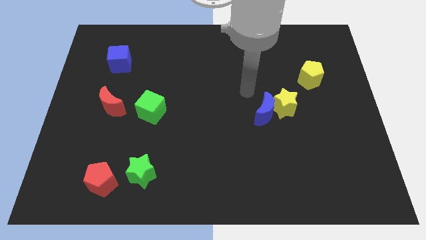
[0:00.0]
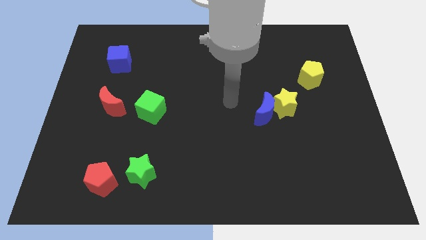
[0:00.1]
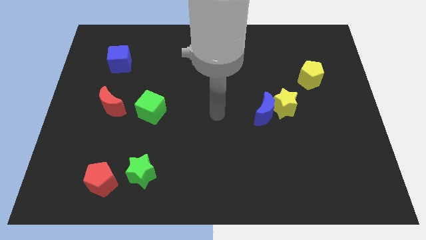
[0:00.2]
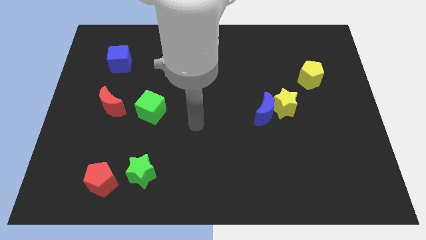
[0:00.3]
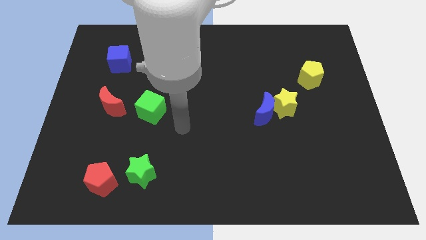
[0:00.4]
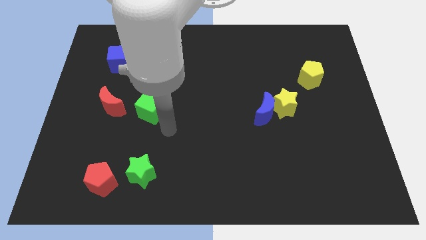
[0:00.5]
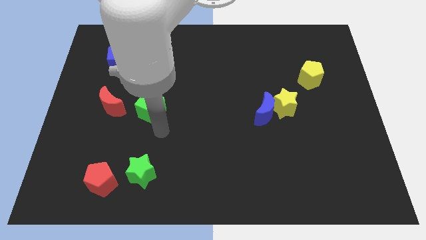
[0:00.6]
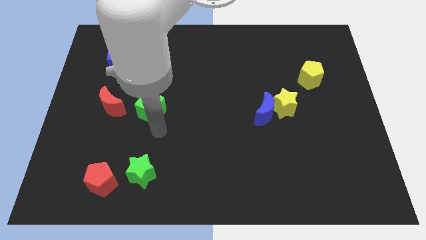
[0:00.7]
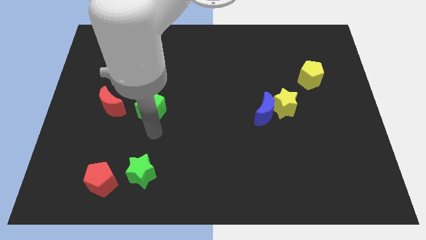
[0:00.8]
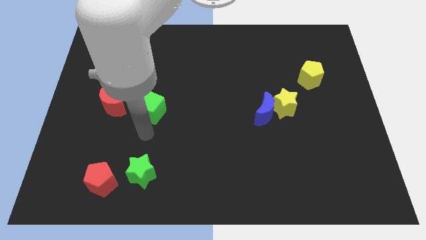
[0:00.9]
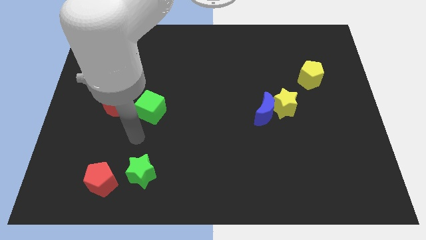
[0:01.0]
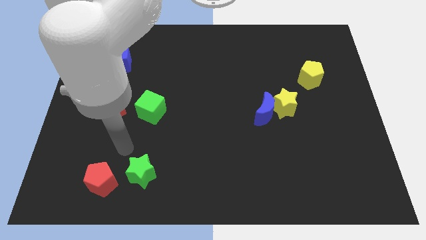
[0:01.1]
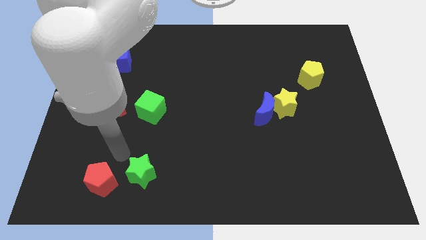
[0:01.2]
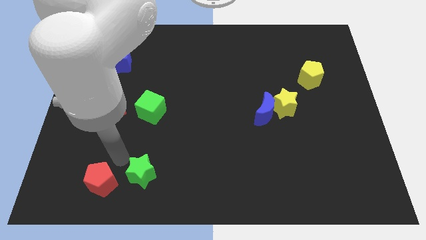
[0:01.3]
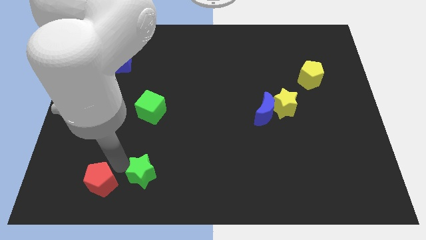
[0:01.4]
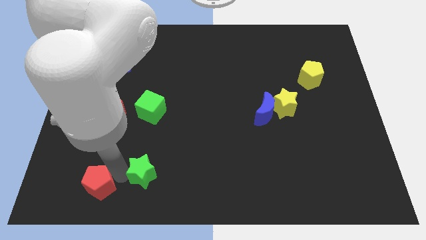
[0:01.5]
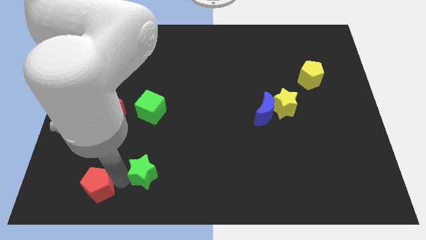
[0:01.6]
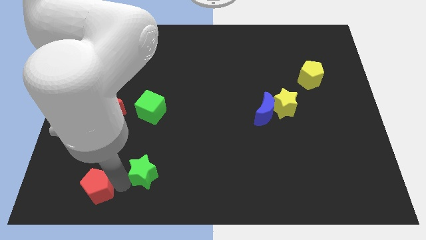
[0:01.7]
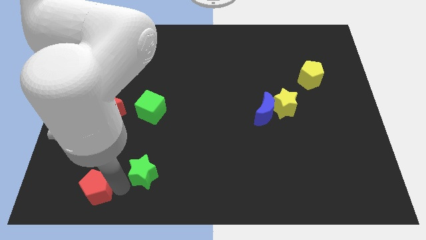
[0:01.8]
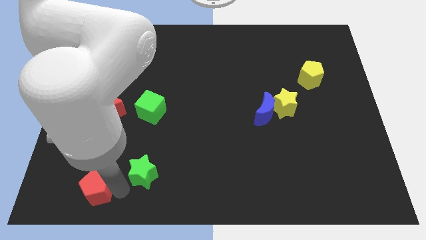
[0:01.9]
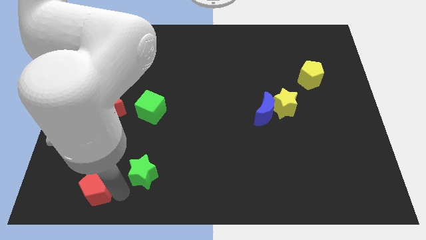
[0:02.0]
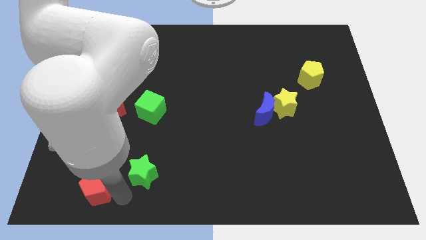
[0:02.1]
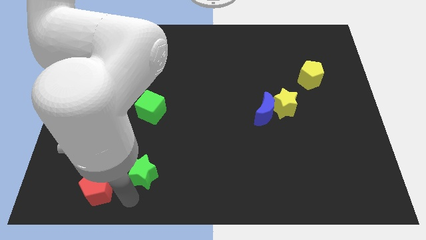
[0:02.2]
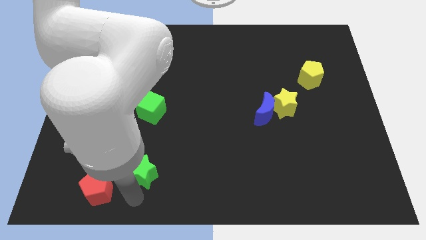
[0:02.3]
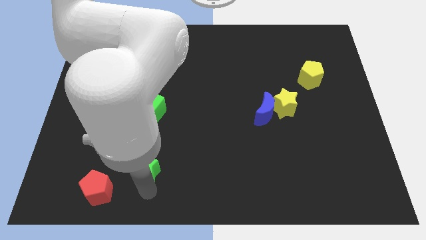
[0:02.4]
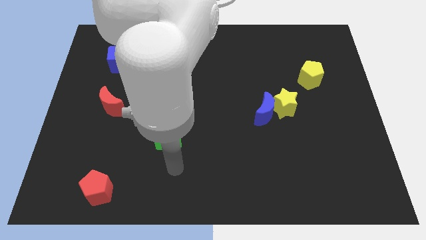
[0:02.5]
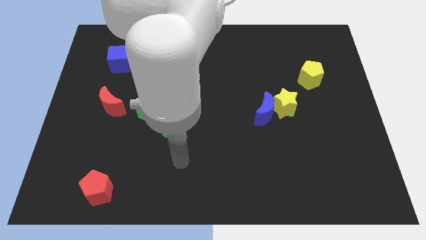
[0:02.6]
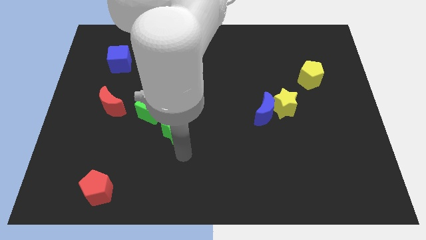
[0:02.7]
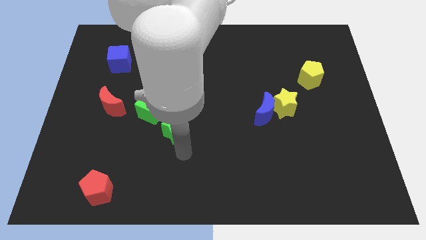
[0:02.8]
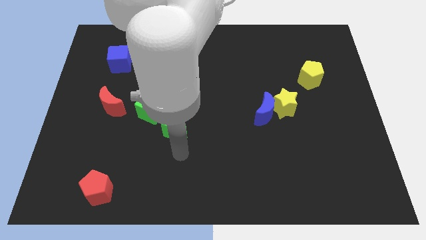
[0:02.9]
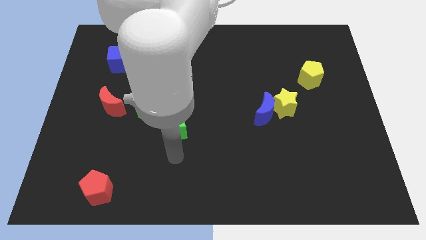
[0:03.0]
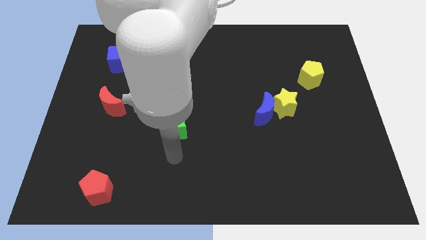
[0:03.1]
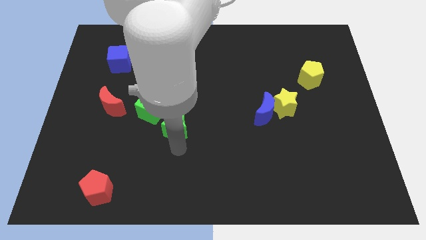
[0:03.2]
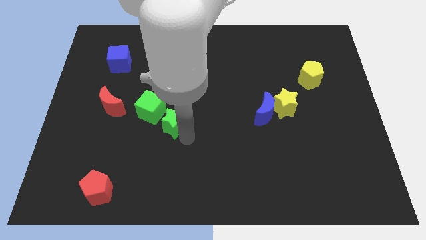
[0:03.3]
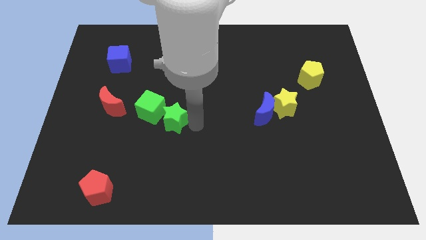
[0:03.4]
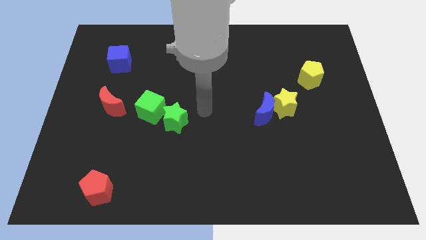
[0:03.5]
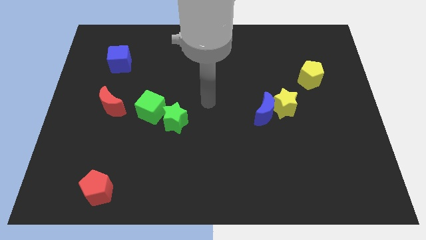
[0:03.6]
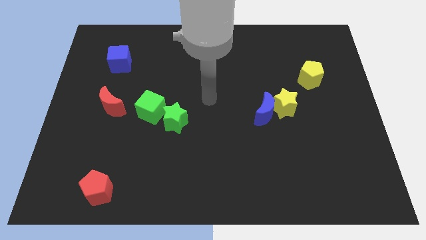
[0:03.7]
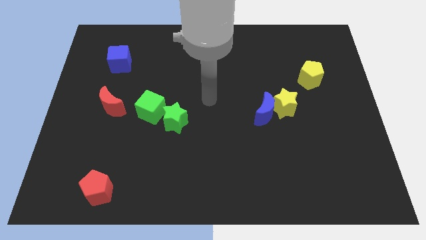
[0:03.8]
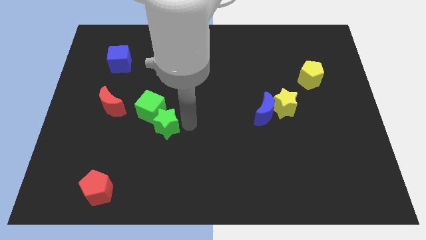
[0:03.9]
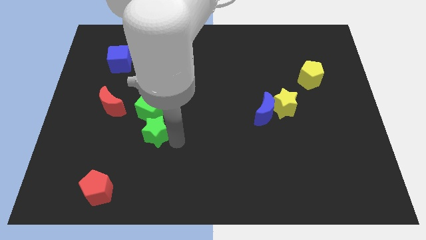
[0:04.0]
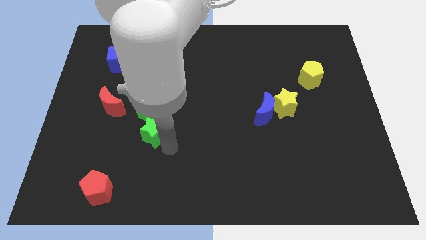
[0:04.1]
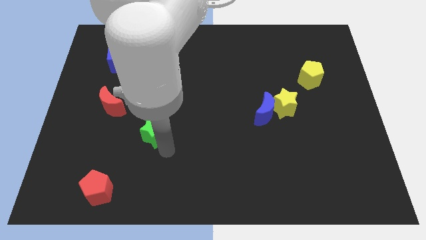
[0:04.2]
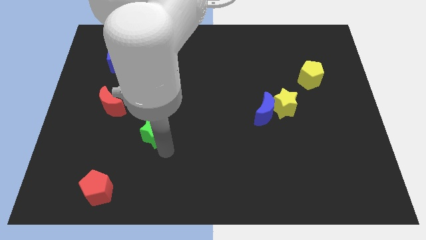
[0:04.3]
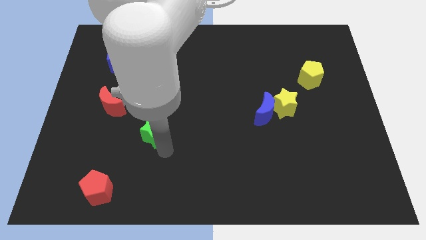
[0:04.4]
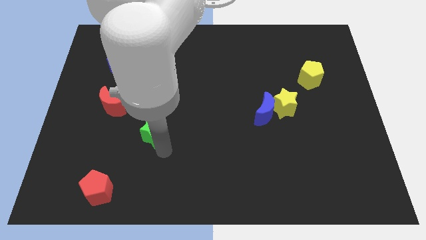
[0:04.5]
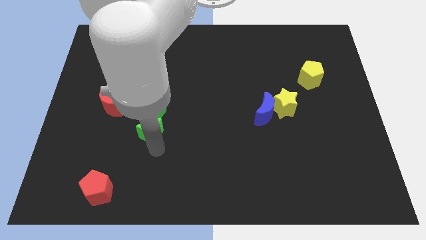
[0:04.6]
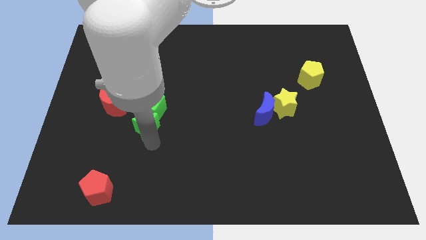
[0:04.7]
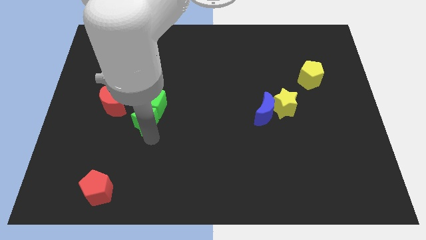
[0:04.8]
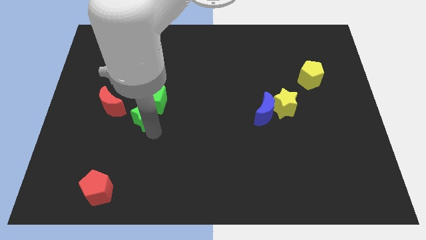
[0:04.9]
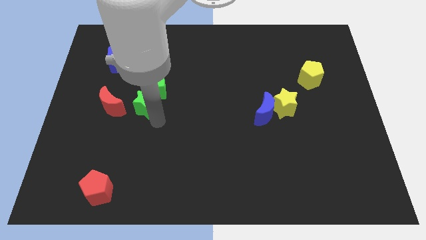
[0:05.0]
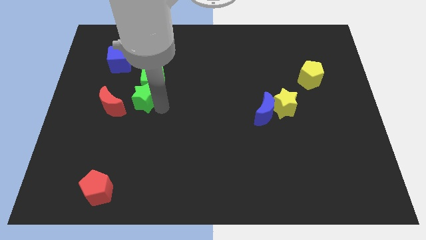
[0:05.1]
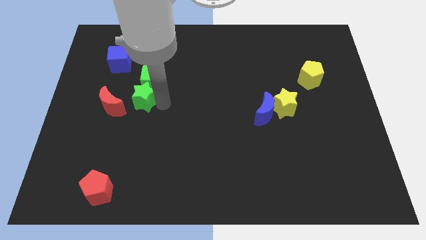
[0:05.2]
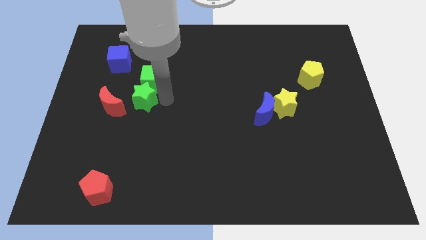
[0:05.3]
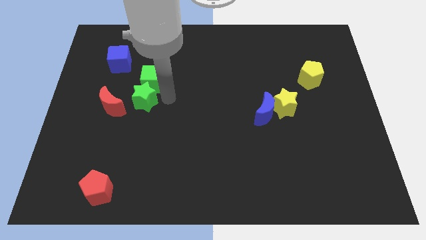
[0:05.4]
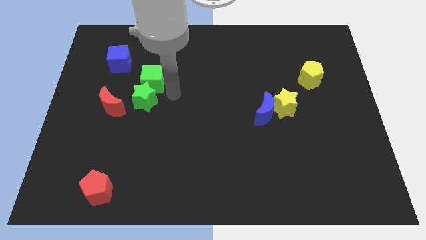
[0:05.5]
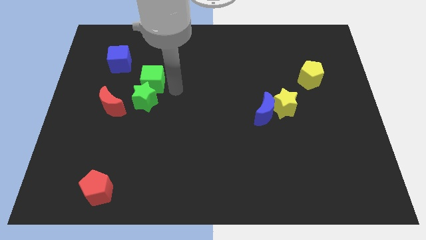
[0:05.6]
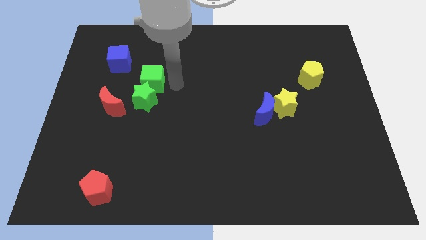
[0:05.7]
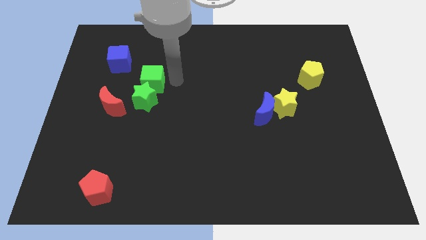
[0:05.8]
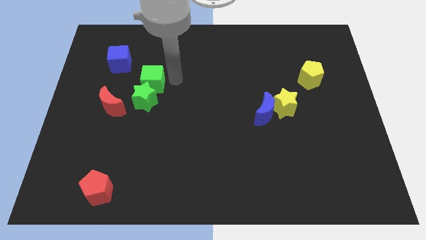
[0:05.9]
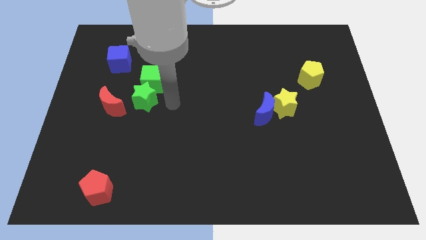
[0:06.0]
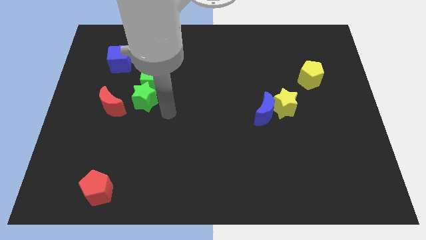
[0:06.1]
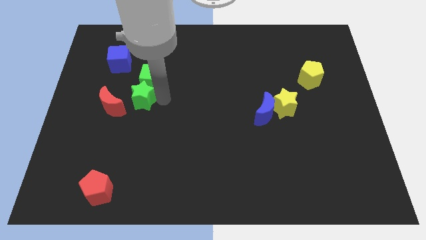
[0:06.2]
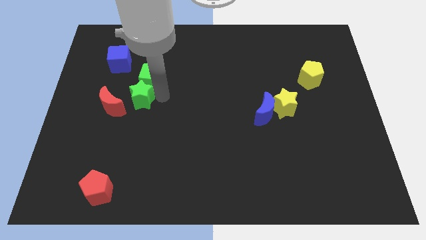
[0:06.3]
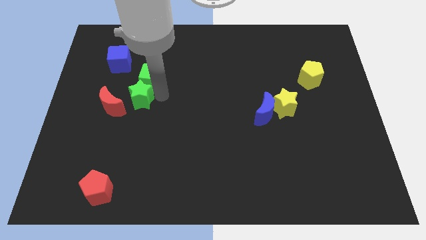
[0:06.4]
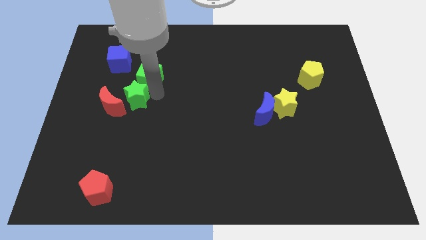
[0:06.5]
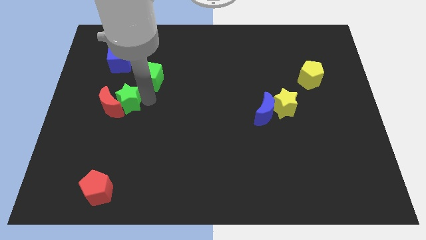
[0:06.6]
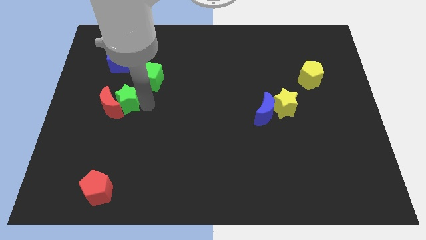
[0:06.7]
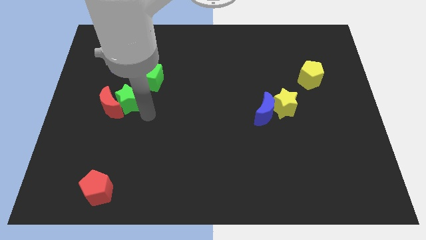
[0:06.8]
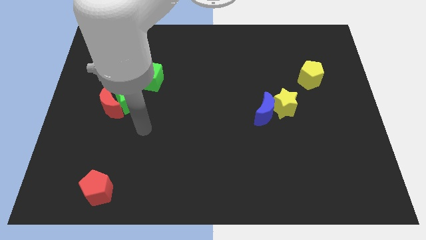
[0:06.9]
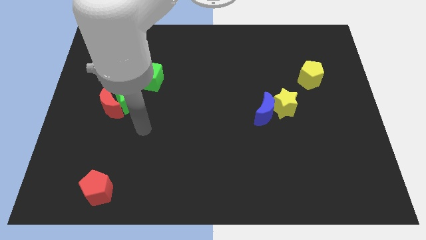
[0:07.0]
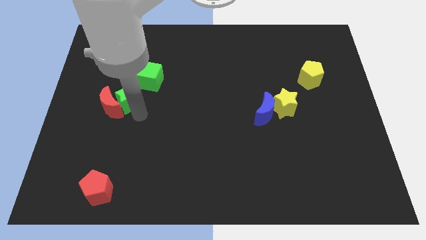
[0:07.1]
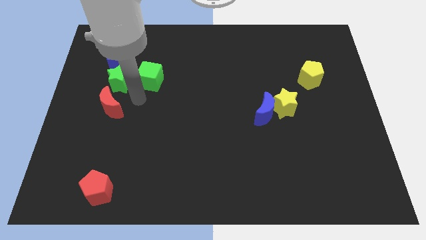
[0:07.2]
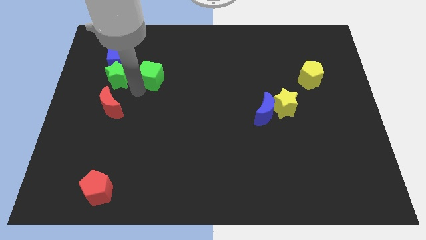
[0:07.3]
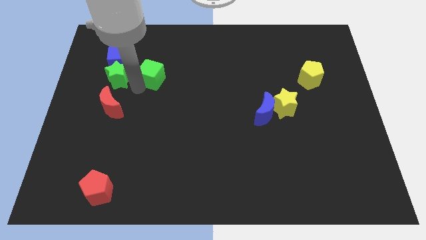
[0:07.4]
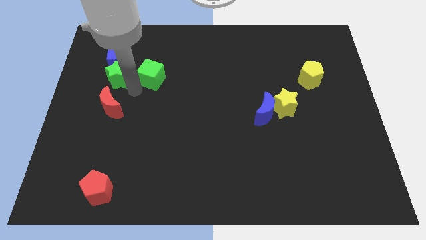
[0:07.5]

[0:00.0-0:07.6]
put the green star to the blue cube

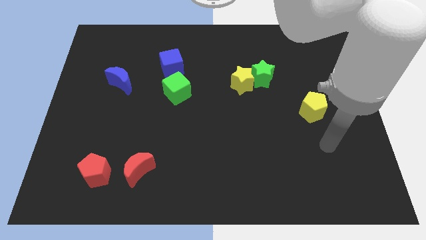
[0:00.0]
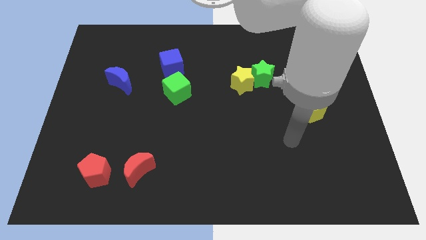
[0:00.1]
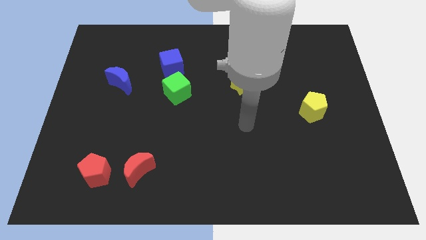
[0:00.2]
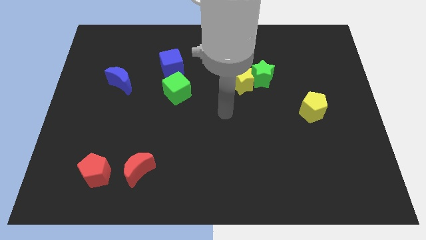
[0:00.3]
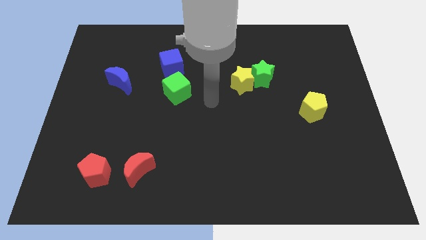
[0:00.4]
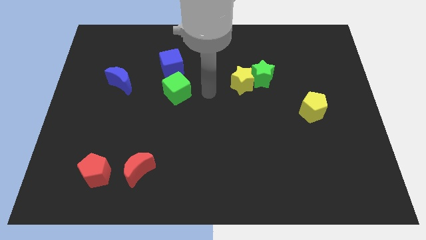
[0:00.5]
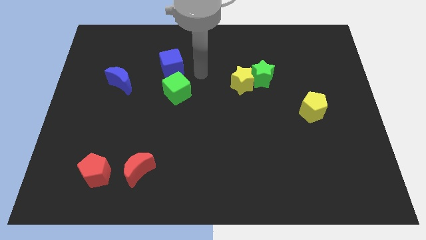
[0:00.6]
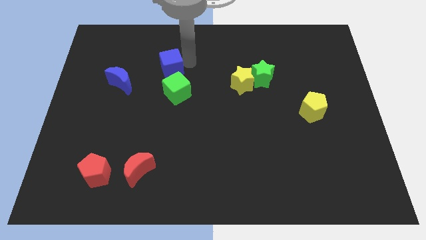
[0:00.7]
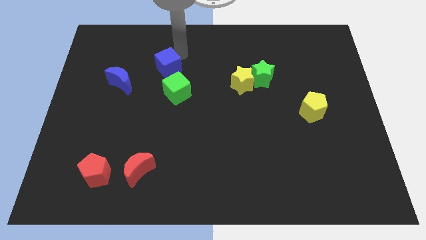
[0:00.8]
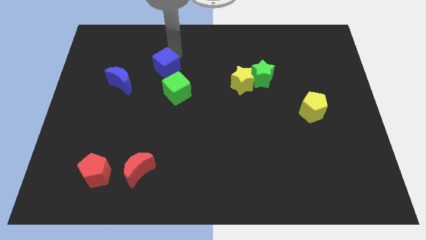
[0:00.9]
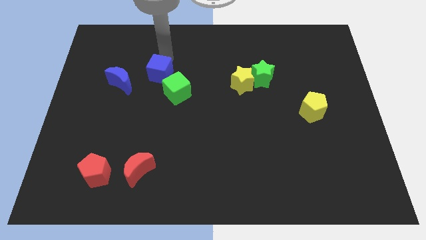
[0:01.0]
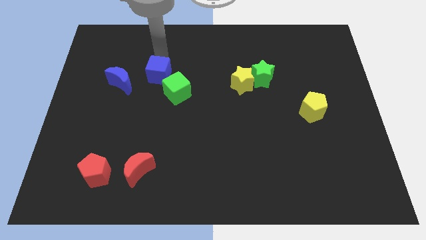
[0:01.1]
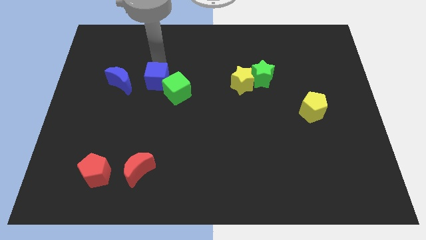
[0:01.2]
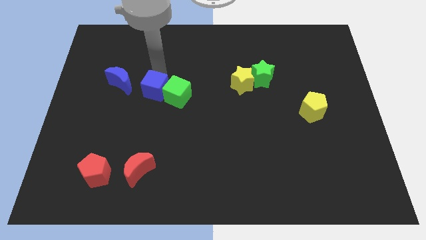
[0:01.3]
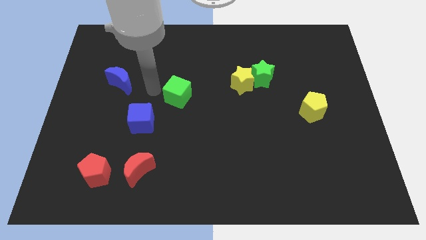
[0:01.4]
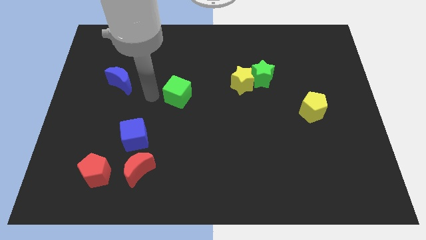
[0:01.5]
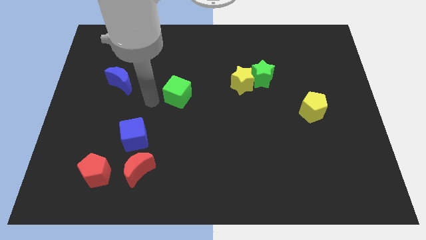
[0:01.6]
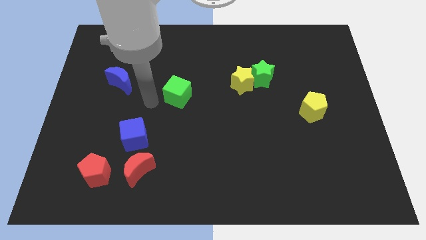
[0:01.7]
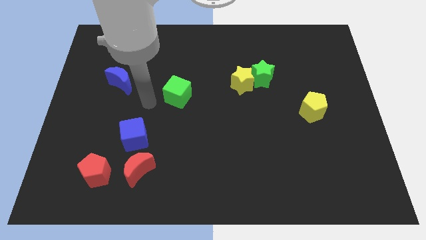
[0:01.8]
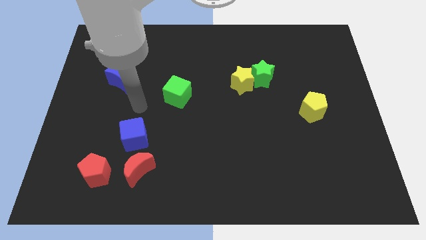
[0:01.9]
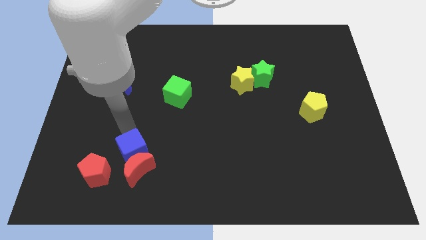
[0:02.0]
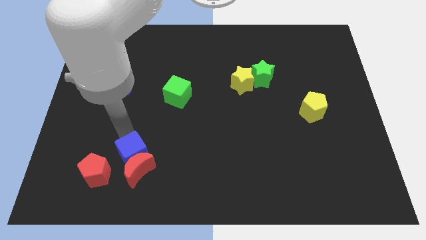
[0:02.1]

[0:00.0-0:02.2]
slide the blue cube towards the red moon
